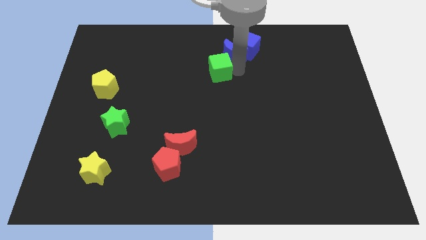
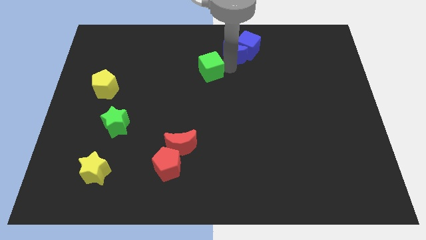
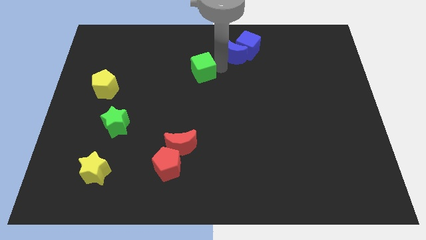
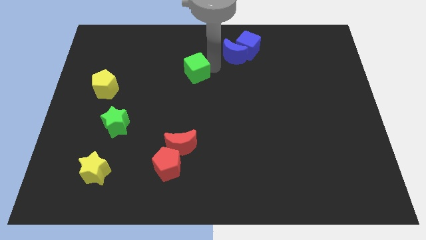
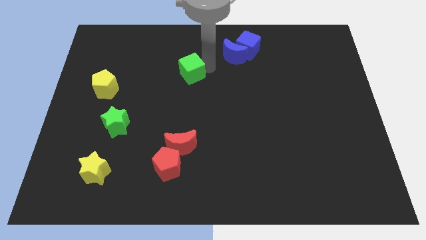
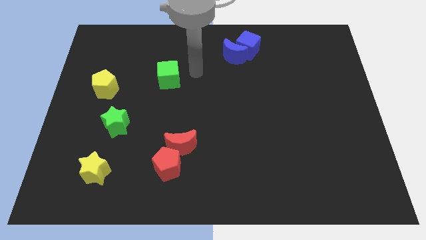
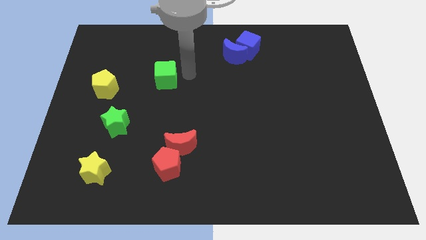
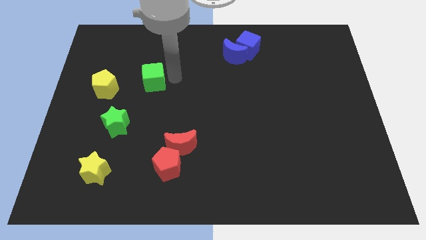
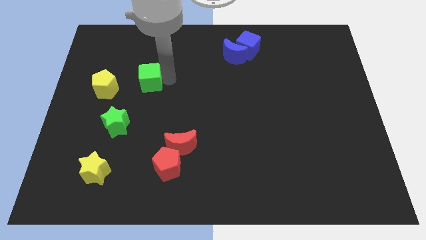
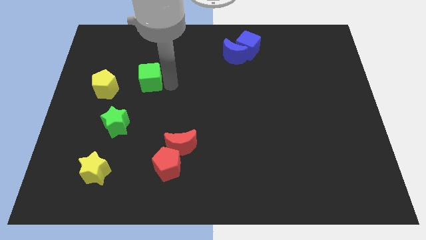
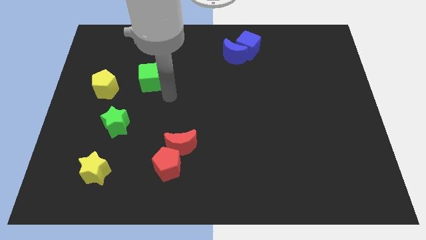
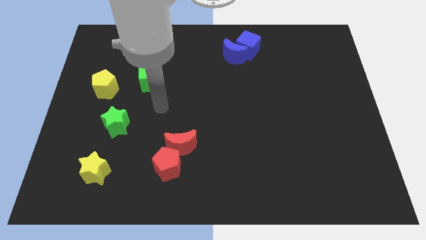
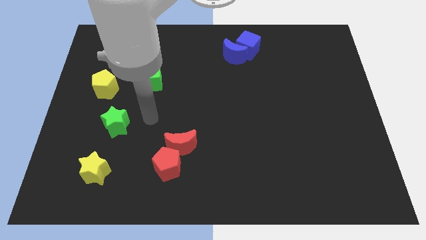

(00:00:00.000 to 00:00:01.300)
push the green cube away from the blue blocks

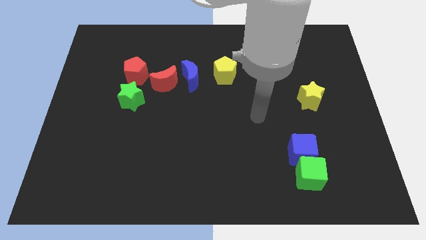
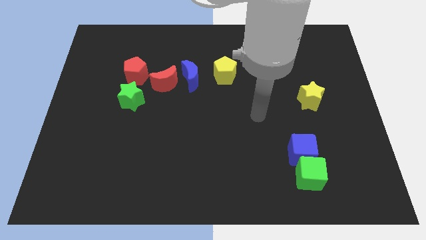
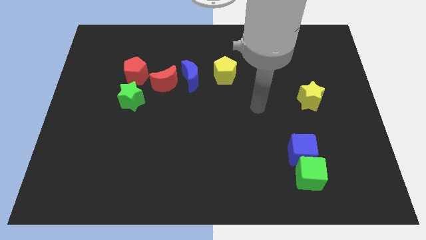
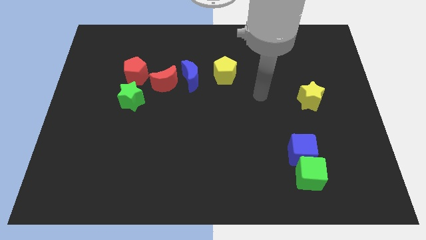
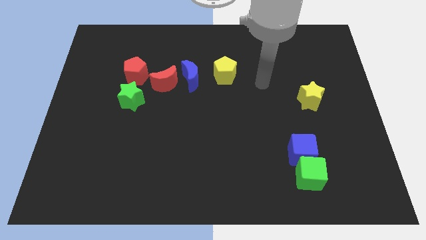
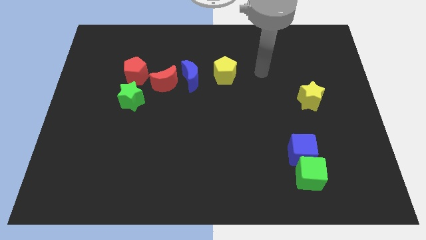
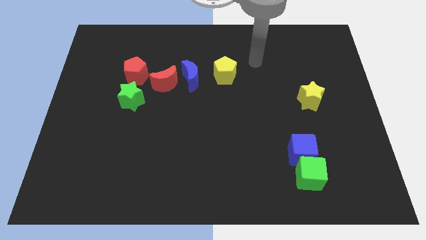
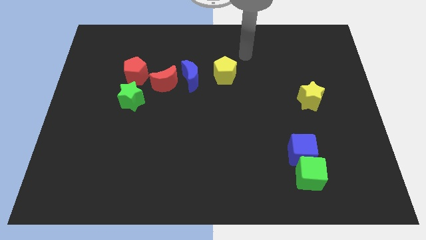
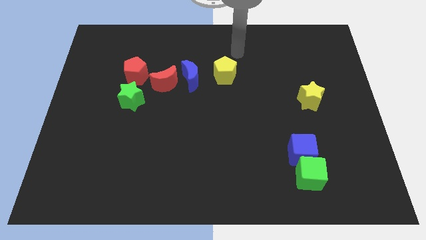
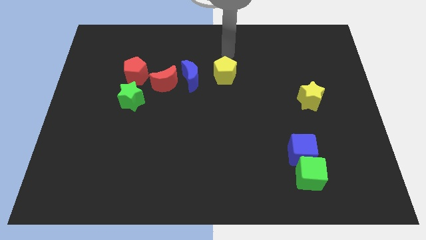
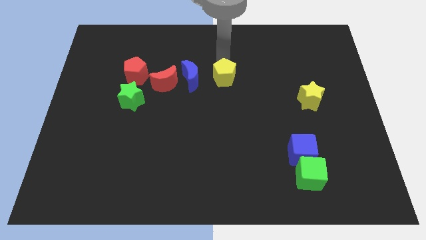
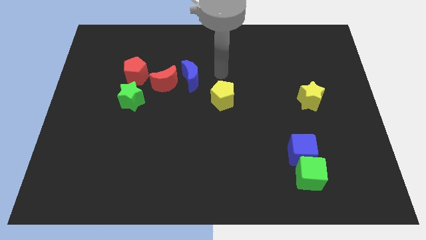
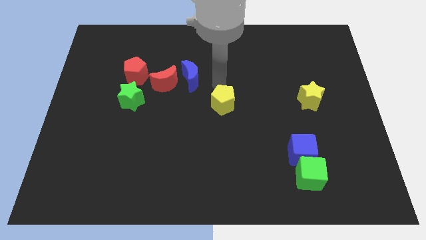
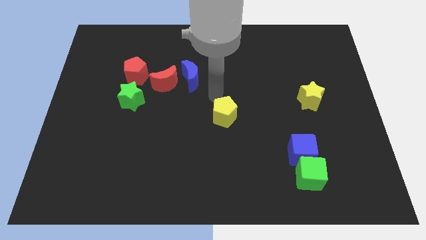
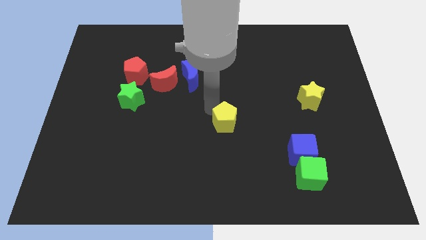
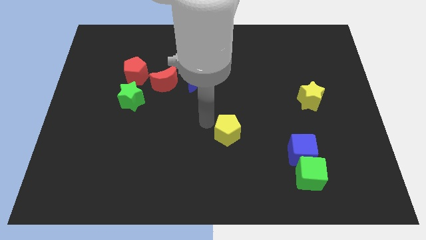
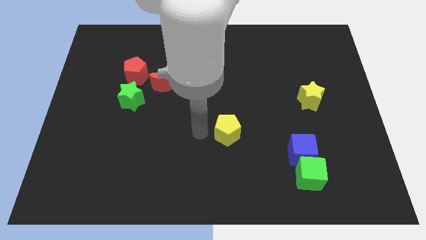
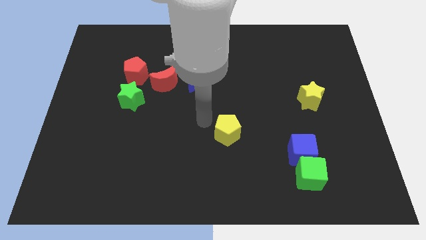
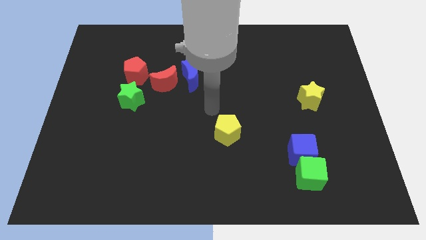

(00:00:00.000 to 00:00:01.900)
move the yellow pentagon towards the bottom of the board

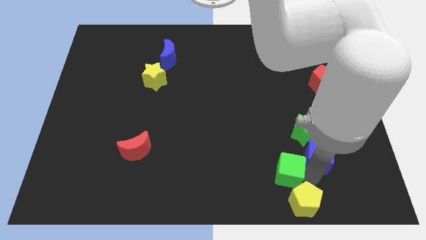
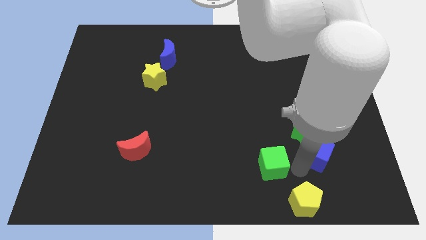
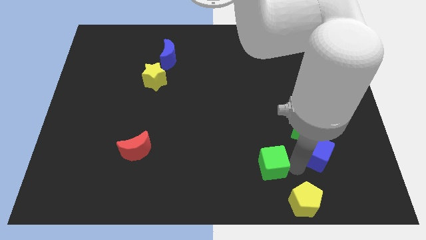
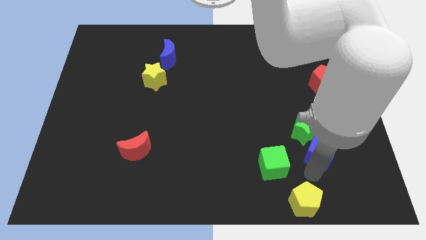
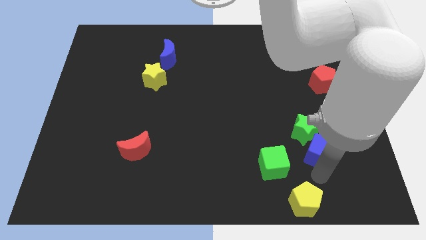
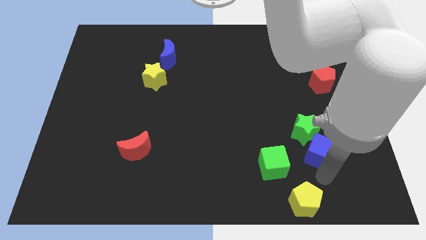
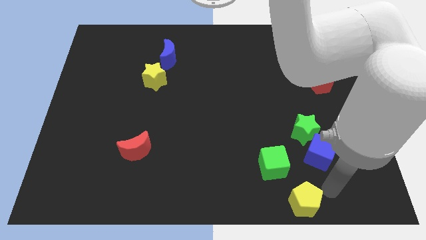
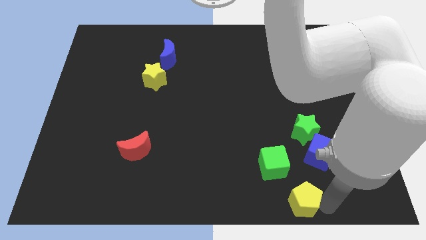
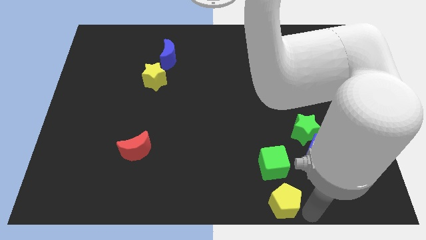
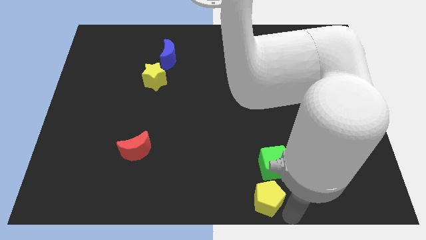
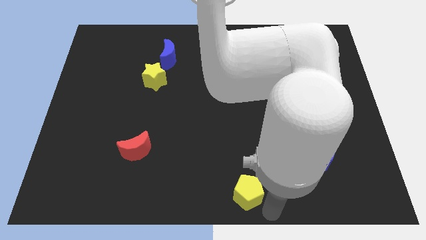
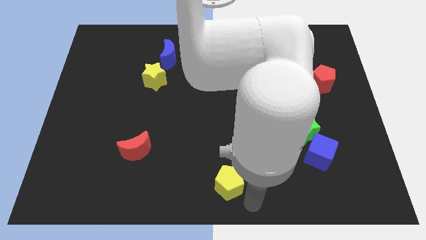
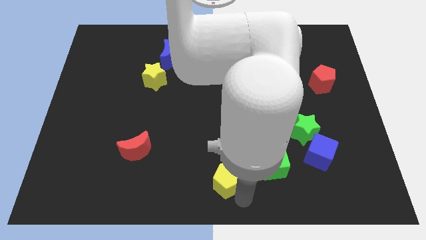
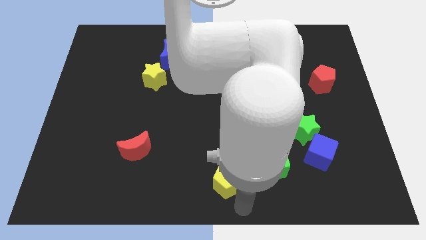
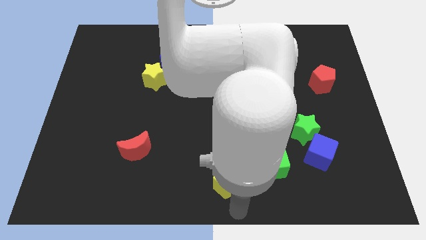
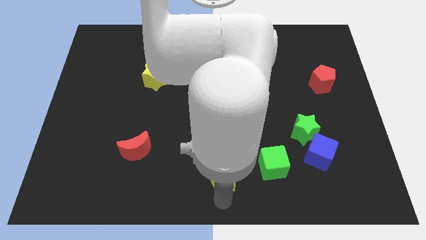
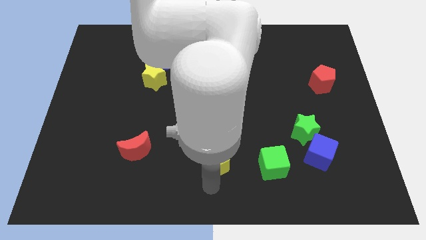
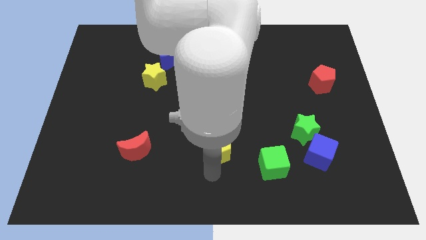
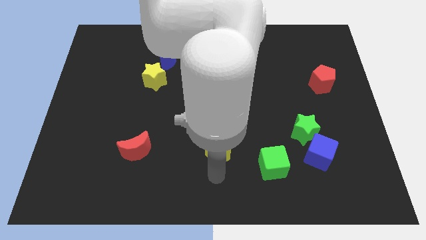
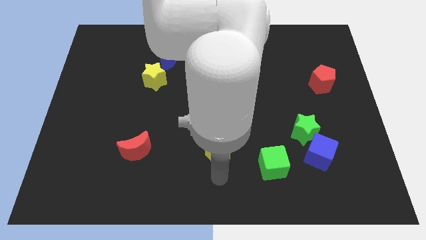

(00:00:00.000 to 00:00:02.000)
move the yellow pentagon right to the red crescent

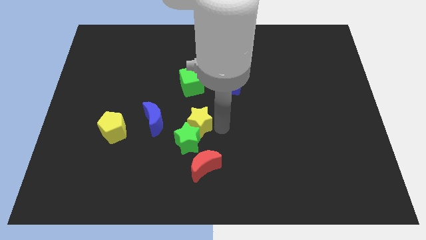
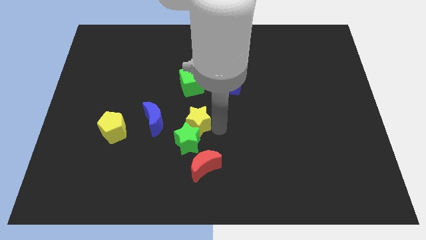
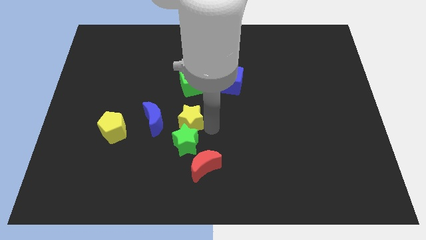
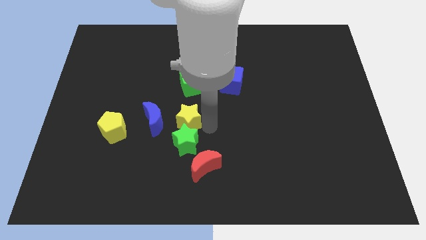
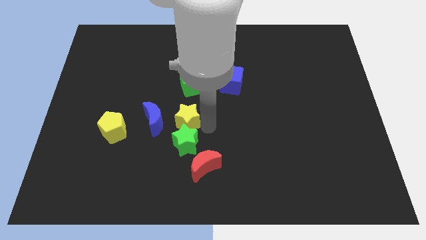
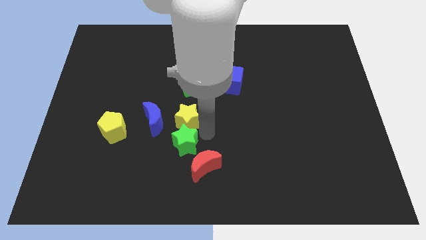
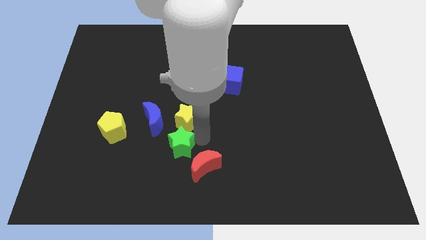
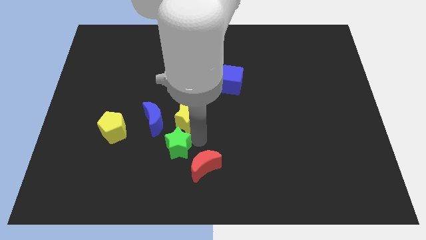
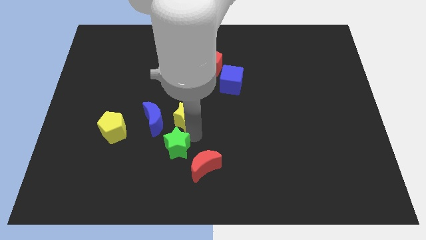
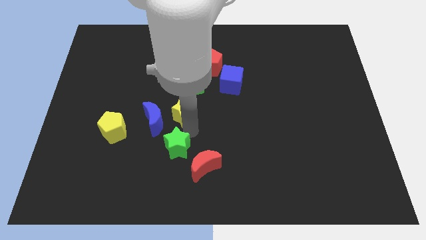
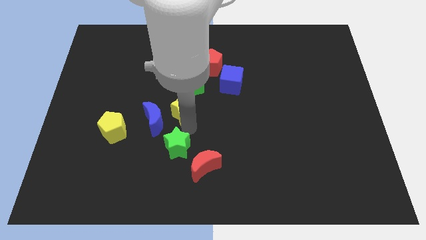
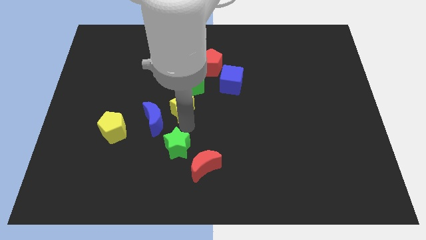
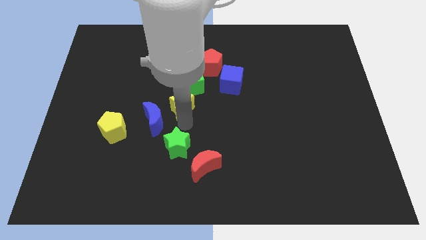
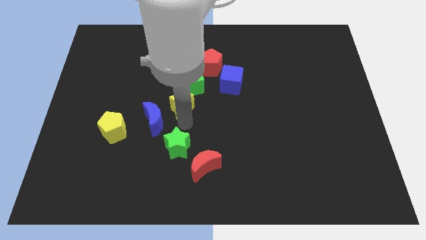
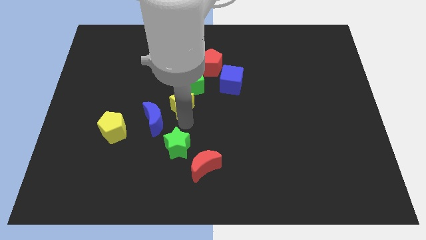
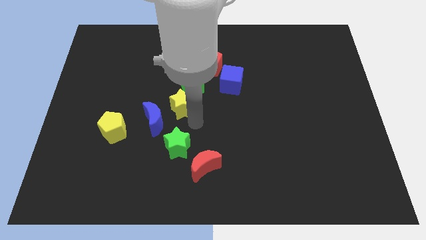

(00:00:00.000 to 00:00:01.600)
place the yellow star below the green cube

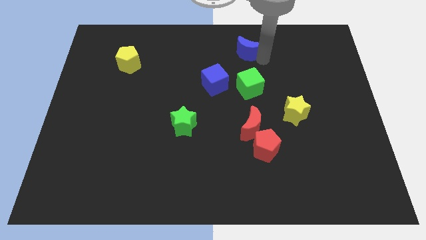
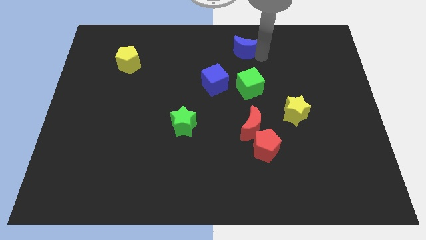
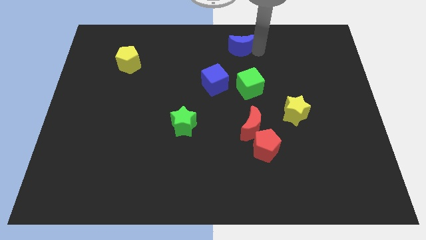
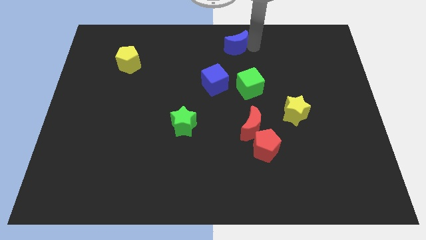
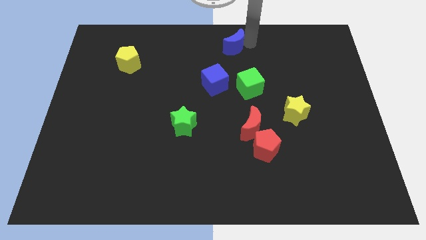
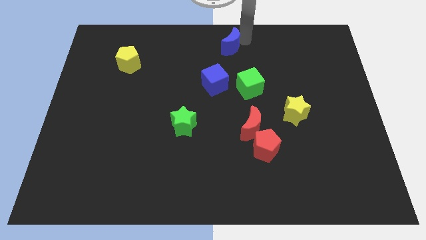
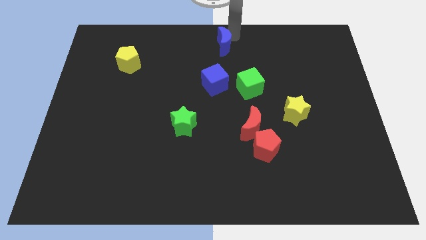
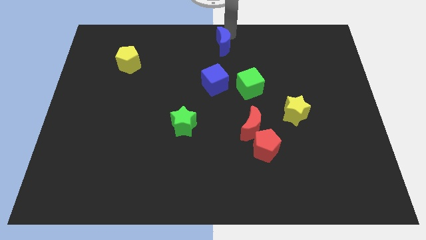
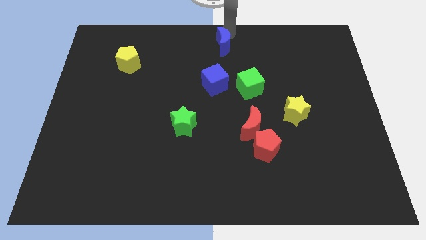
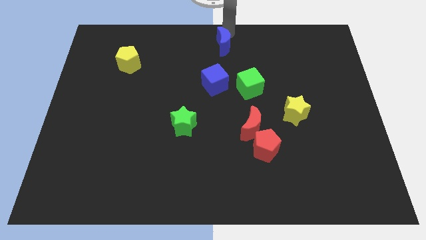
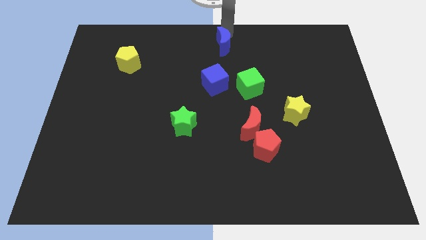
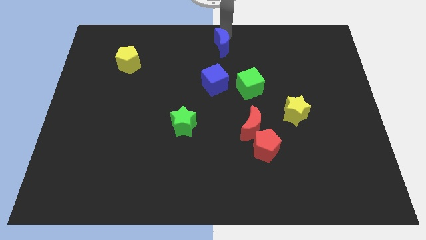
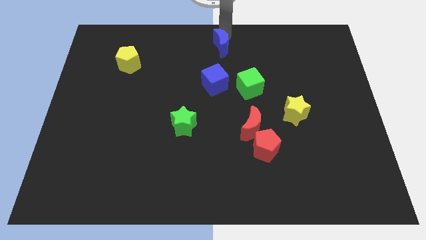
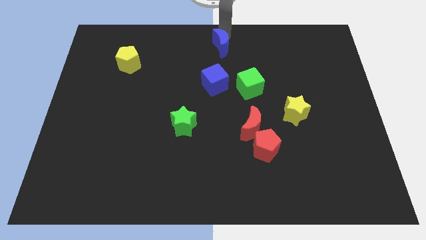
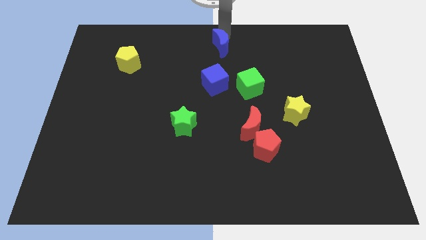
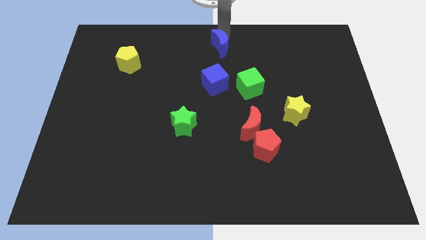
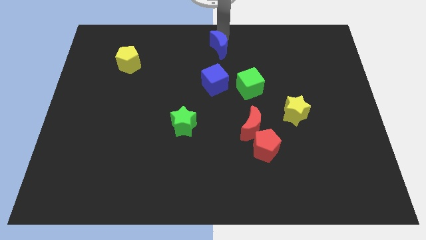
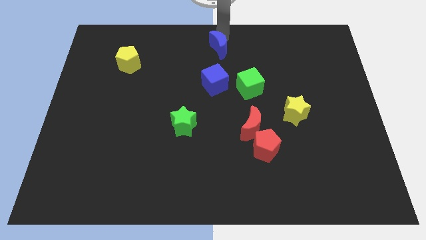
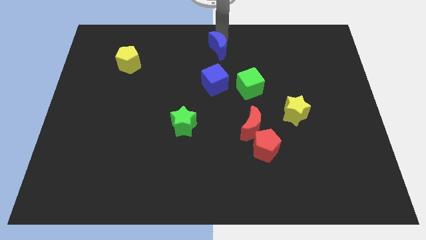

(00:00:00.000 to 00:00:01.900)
put the blue moon vertically above the blue cube

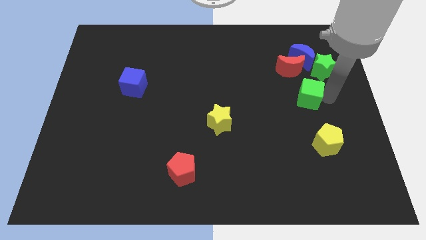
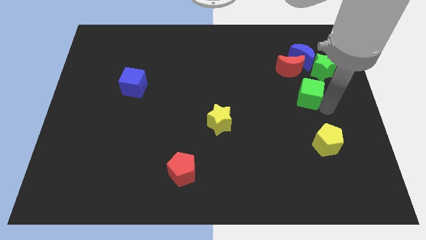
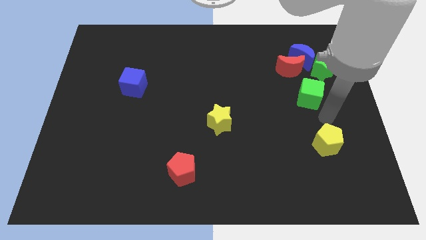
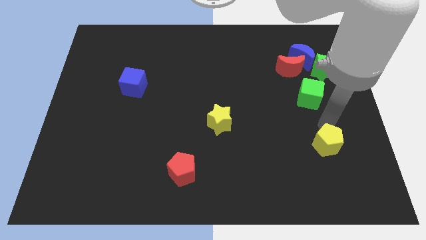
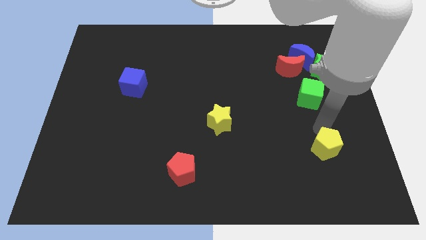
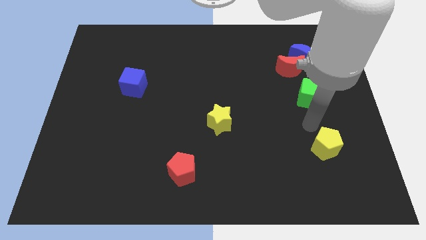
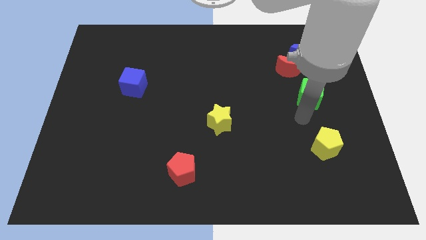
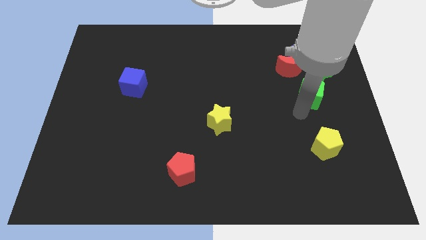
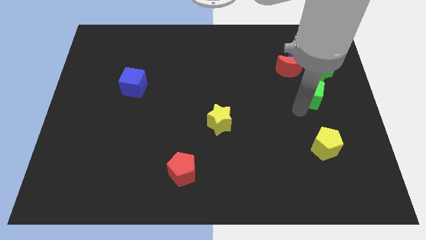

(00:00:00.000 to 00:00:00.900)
push the yellow pentagon slightly downward
